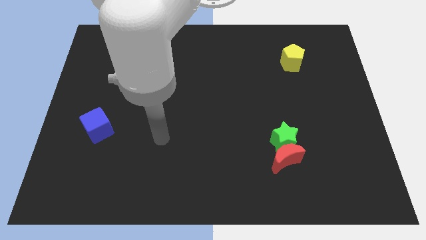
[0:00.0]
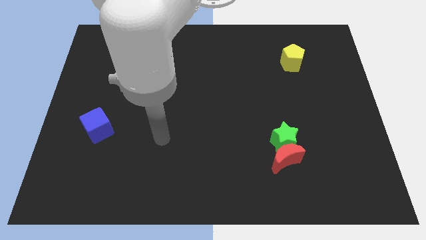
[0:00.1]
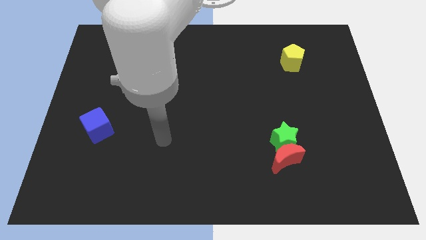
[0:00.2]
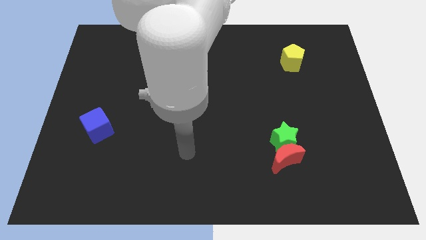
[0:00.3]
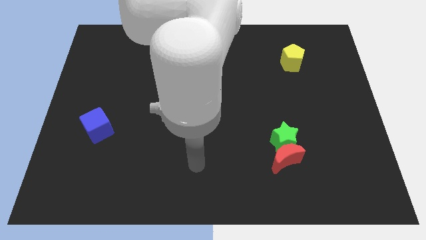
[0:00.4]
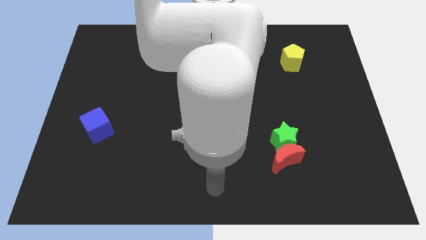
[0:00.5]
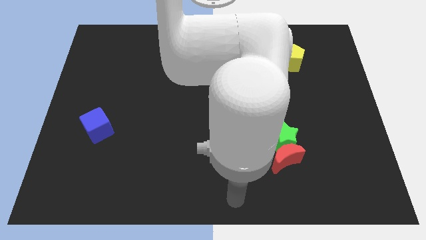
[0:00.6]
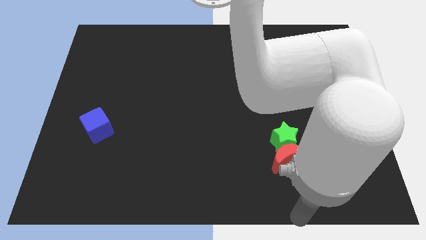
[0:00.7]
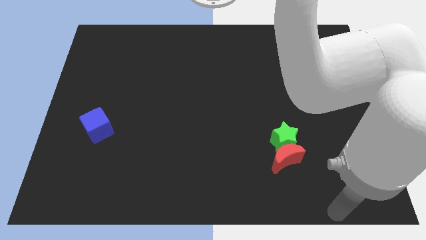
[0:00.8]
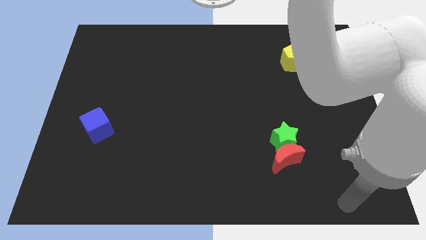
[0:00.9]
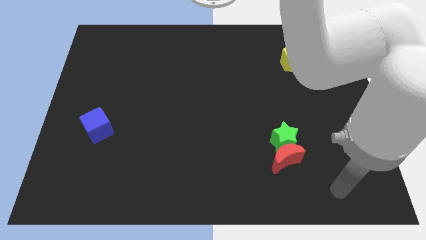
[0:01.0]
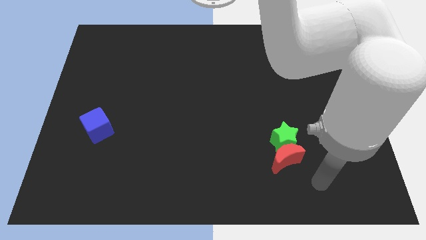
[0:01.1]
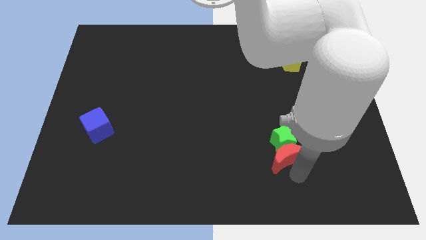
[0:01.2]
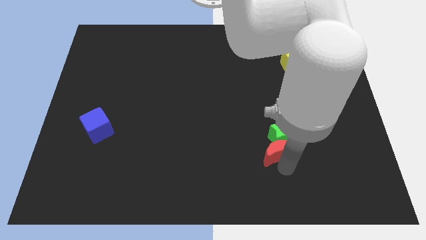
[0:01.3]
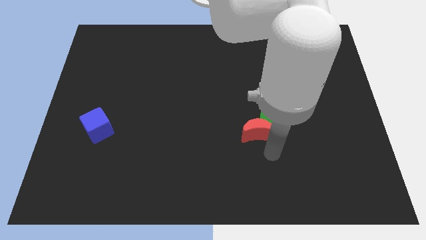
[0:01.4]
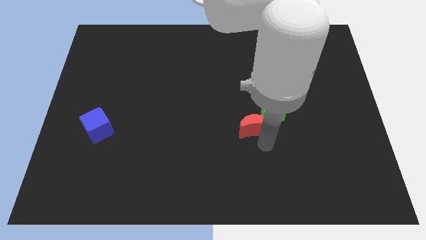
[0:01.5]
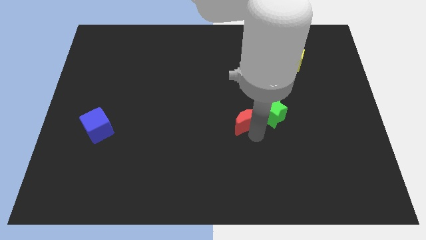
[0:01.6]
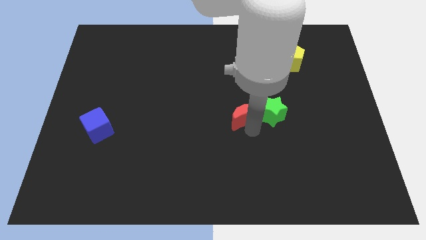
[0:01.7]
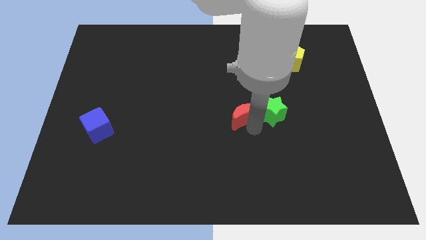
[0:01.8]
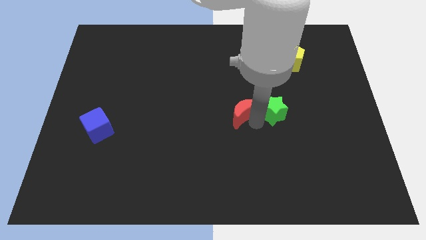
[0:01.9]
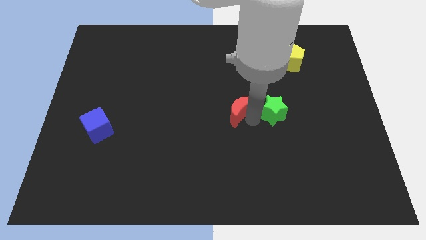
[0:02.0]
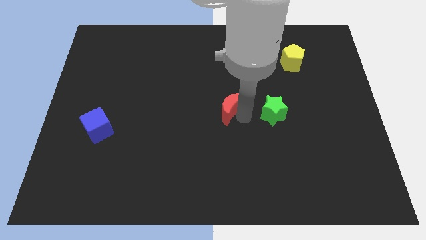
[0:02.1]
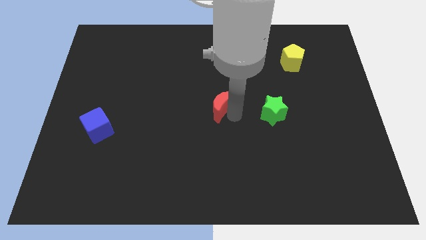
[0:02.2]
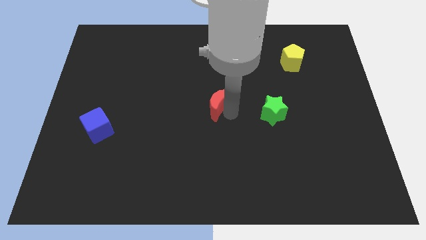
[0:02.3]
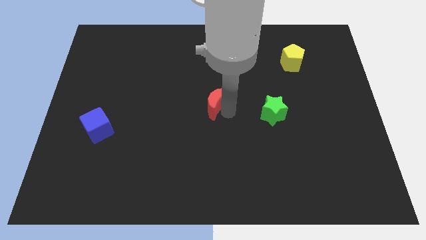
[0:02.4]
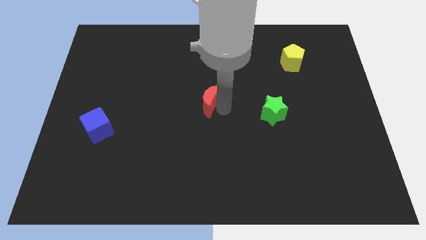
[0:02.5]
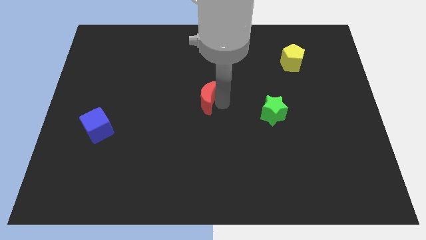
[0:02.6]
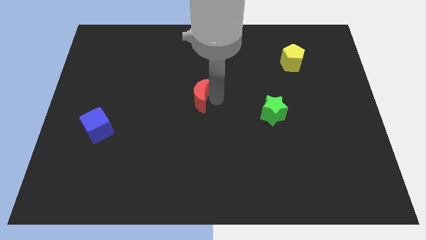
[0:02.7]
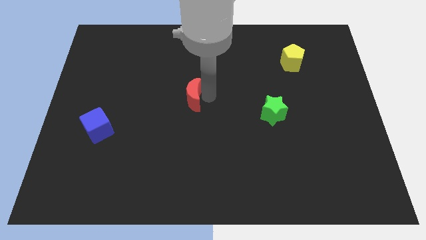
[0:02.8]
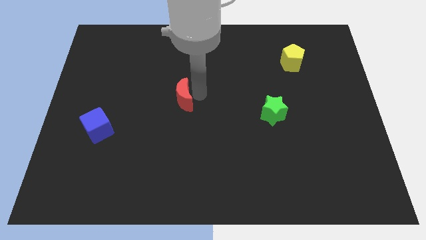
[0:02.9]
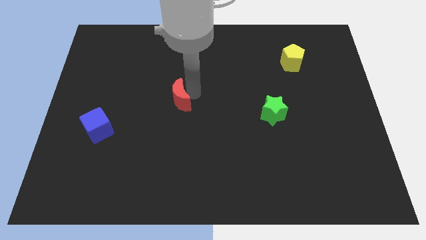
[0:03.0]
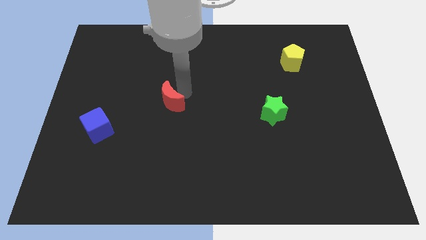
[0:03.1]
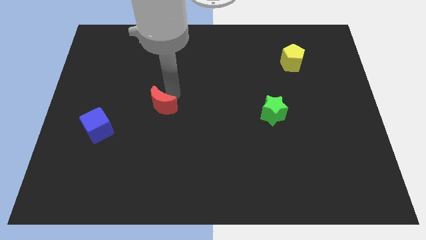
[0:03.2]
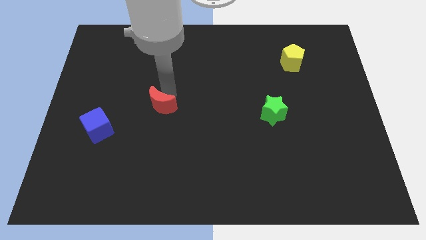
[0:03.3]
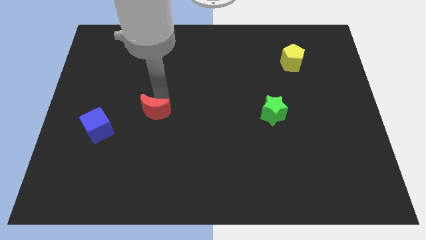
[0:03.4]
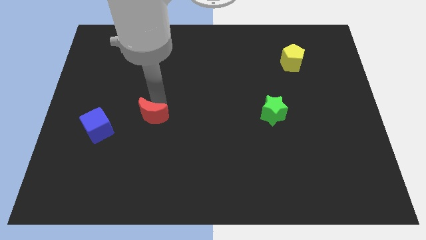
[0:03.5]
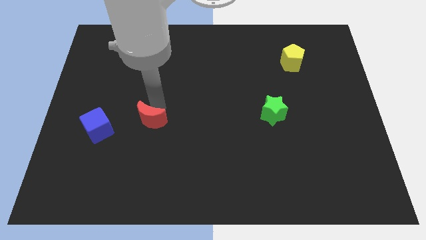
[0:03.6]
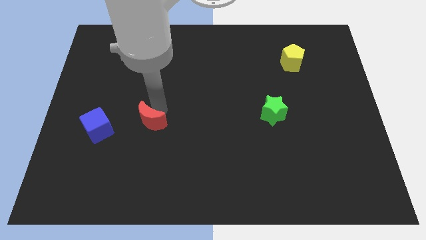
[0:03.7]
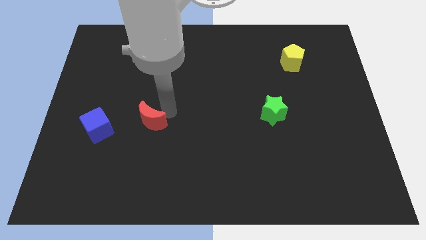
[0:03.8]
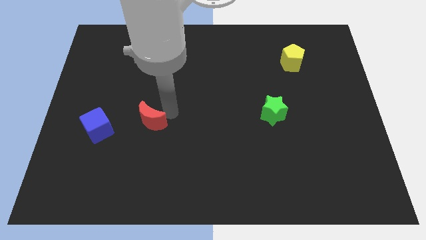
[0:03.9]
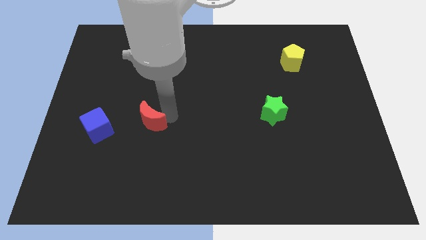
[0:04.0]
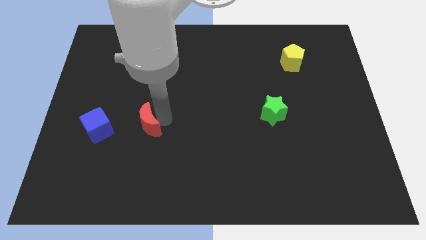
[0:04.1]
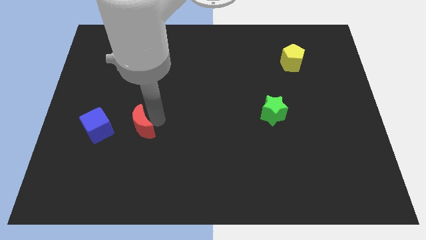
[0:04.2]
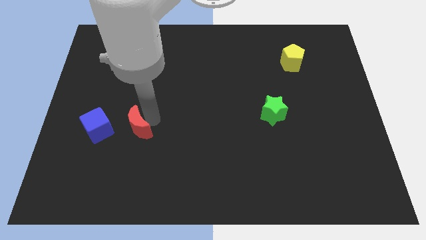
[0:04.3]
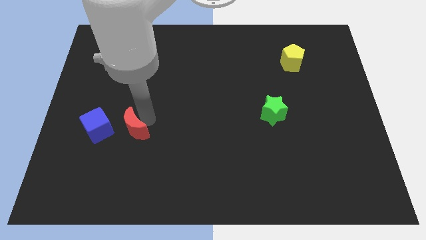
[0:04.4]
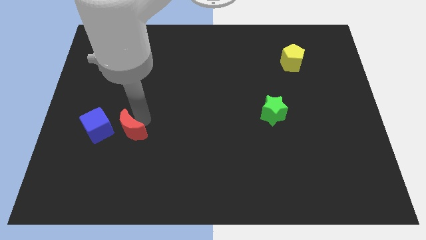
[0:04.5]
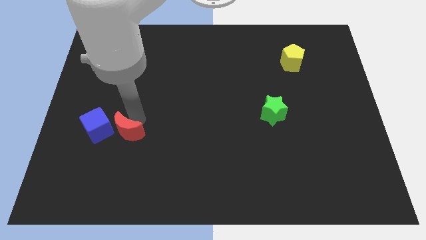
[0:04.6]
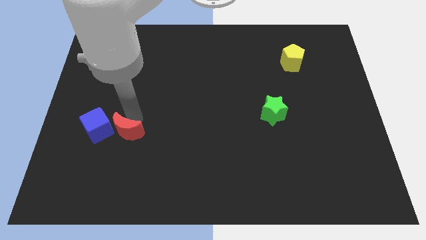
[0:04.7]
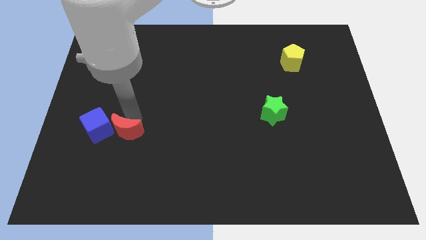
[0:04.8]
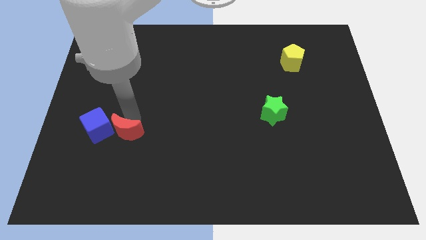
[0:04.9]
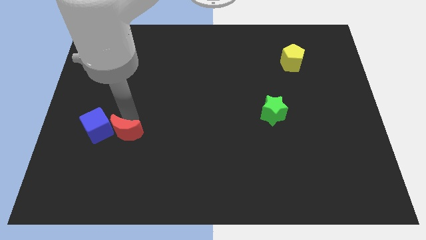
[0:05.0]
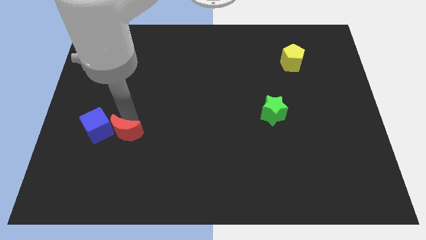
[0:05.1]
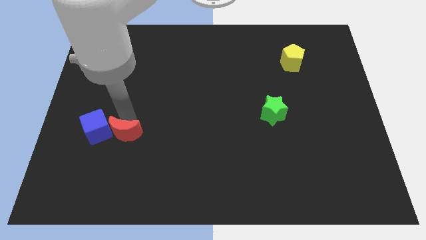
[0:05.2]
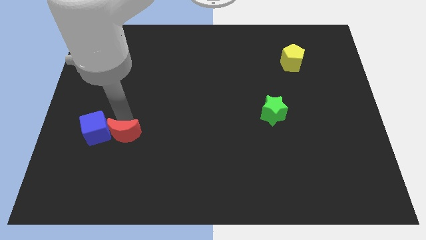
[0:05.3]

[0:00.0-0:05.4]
push the moon towards the blue cube

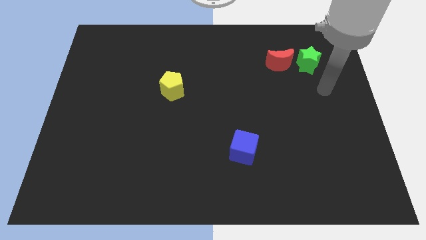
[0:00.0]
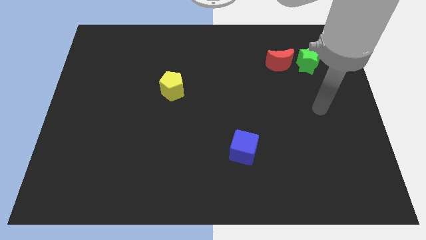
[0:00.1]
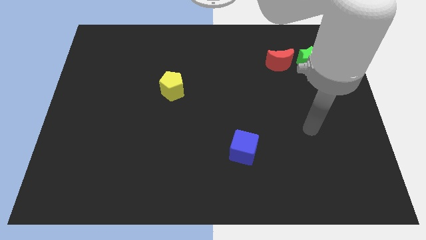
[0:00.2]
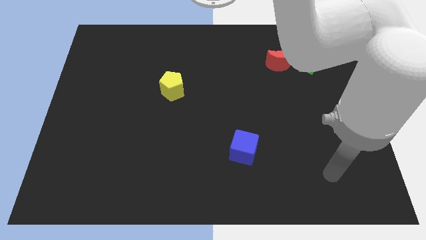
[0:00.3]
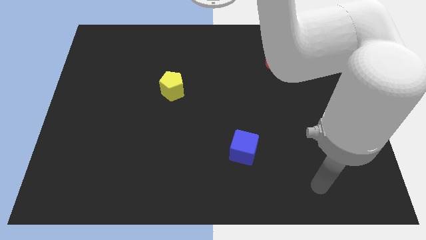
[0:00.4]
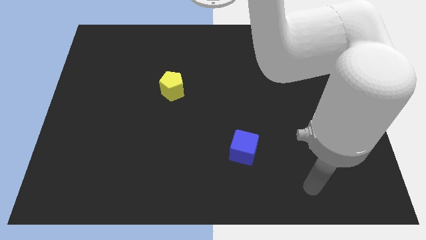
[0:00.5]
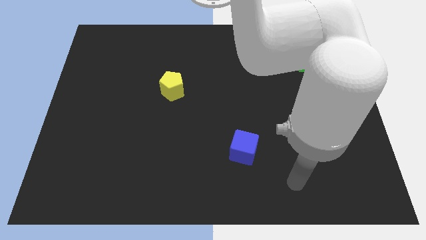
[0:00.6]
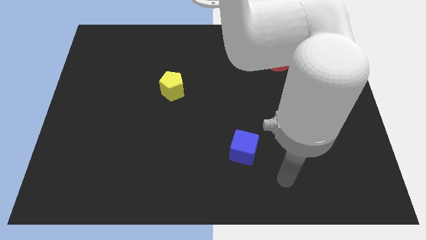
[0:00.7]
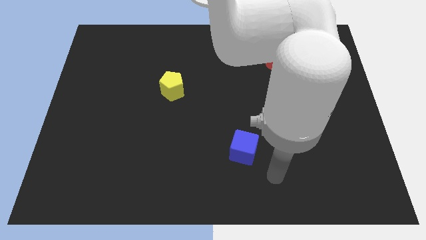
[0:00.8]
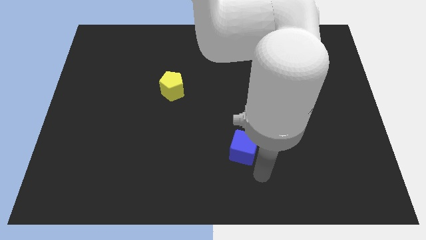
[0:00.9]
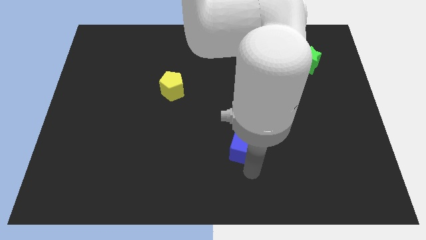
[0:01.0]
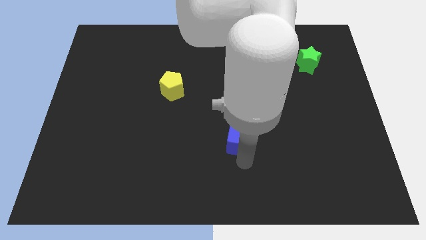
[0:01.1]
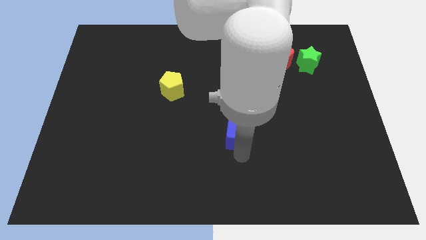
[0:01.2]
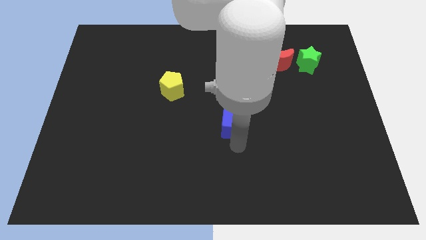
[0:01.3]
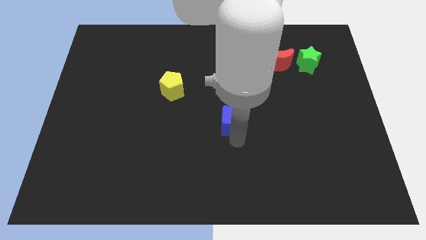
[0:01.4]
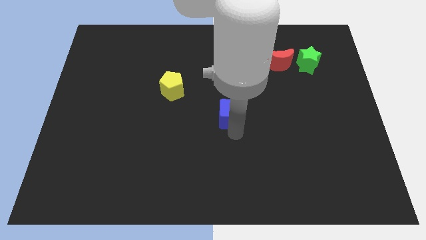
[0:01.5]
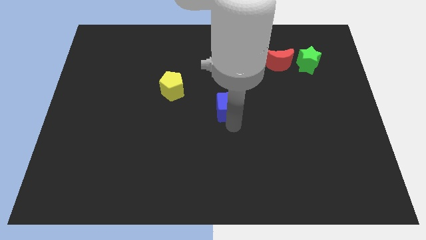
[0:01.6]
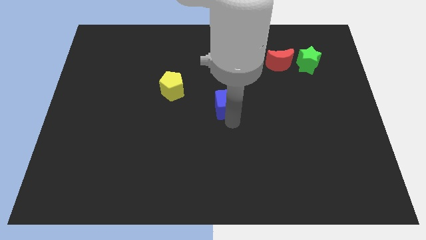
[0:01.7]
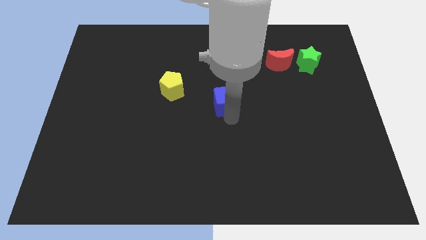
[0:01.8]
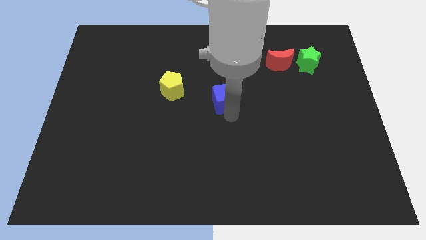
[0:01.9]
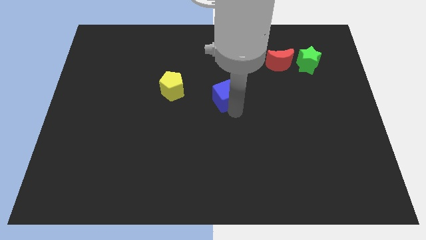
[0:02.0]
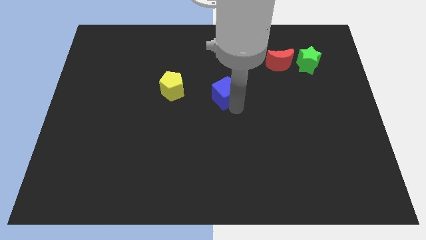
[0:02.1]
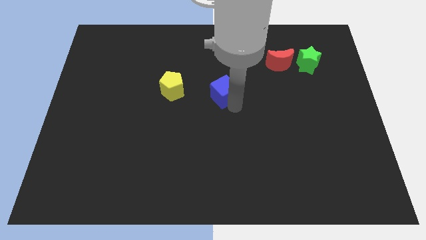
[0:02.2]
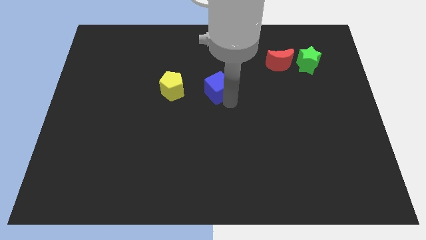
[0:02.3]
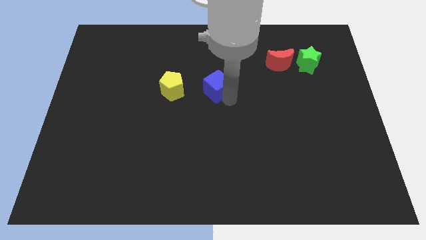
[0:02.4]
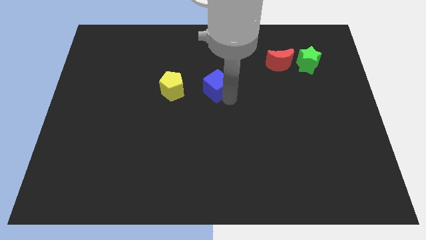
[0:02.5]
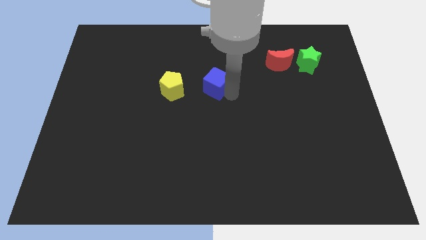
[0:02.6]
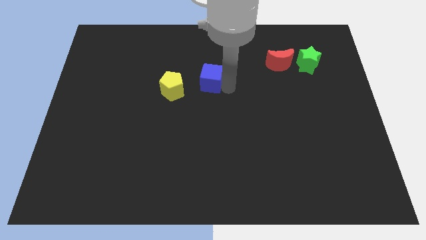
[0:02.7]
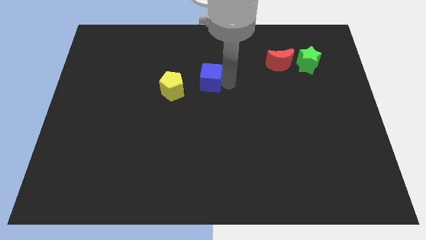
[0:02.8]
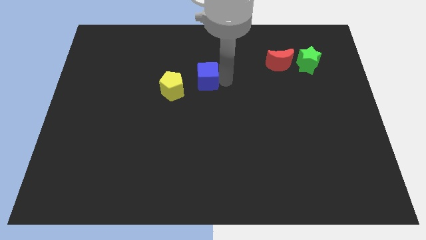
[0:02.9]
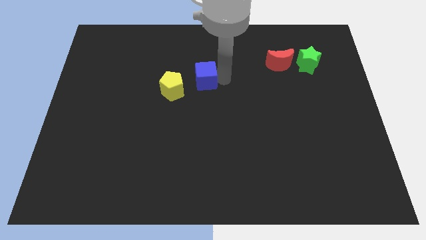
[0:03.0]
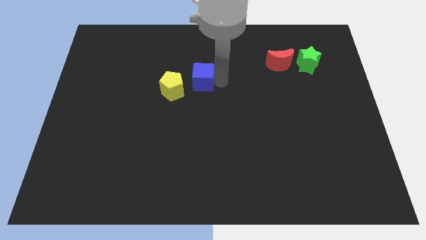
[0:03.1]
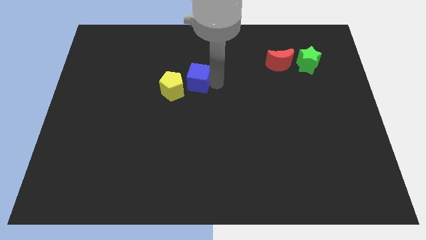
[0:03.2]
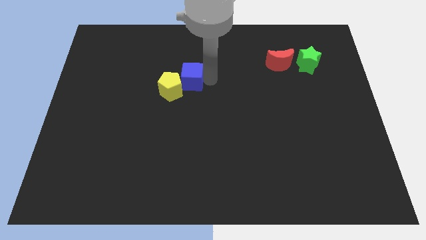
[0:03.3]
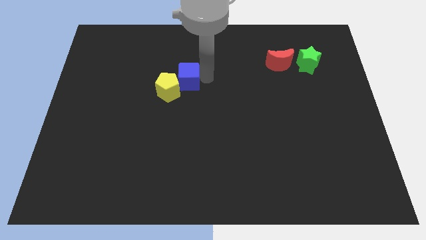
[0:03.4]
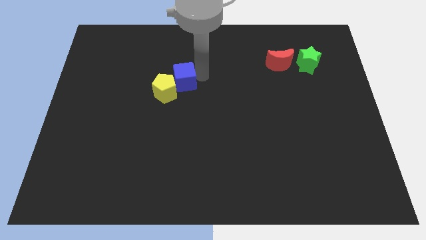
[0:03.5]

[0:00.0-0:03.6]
put the cube close to the pentagon
